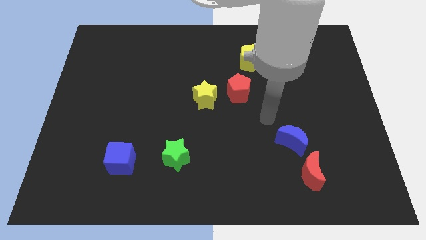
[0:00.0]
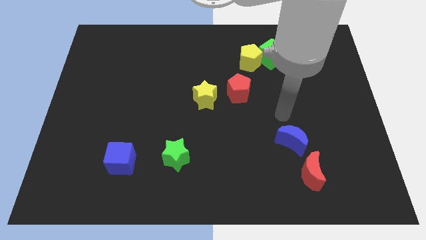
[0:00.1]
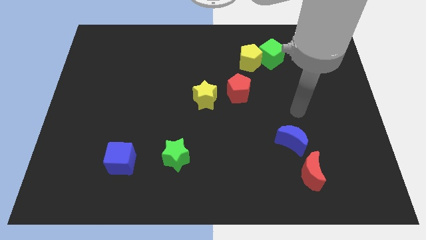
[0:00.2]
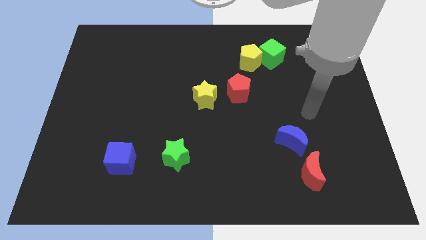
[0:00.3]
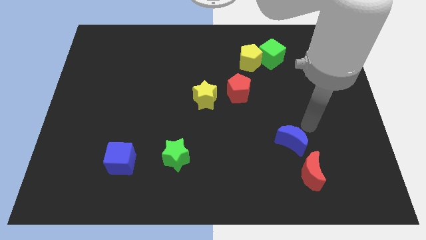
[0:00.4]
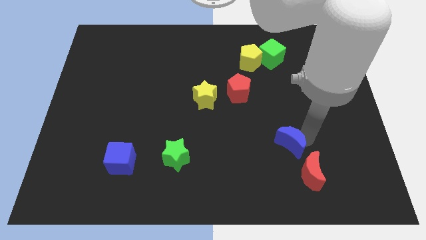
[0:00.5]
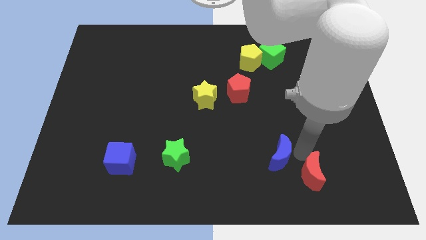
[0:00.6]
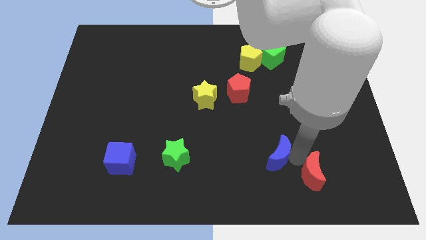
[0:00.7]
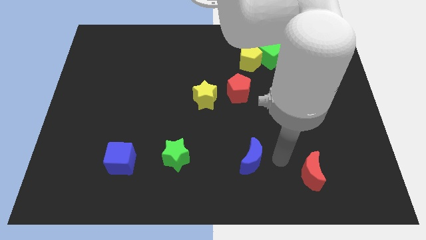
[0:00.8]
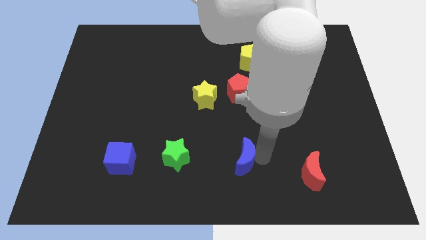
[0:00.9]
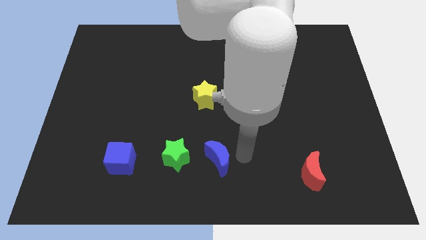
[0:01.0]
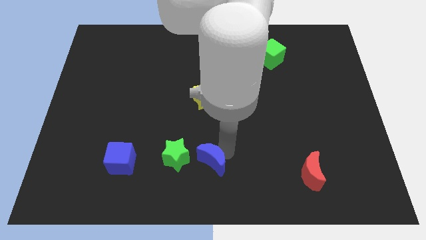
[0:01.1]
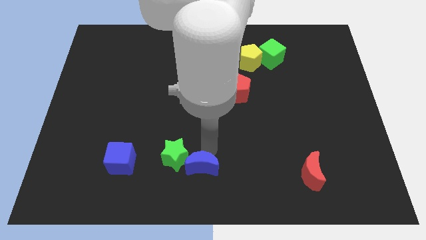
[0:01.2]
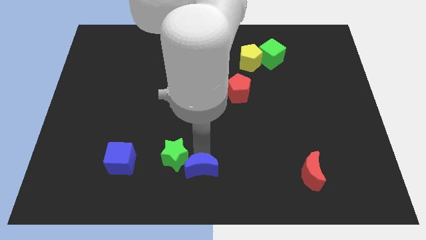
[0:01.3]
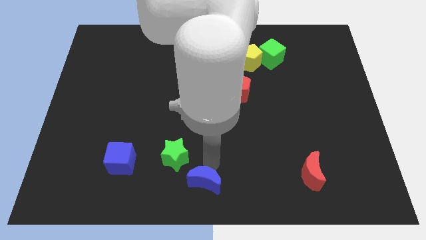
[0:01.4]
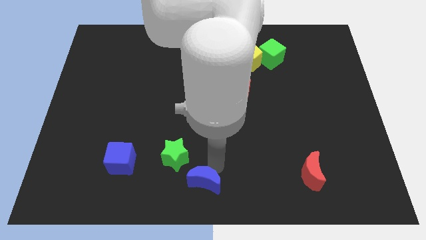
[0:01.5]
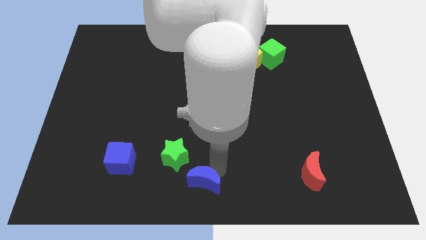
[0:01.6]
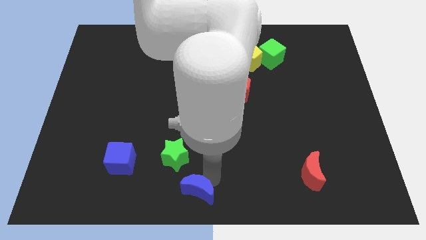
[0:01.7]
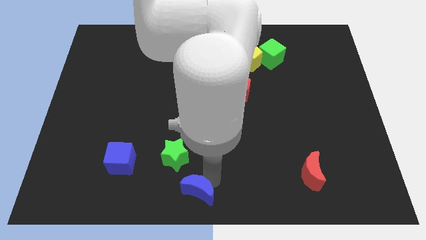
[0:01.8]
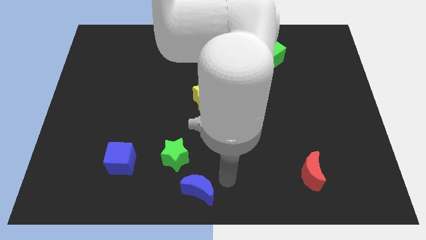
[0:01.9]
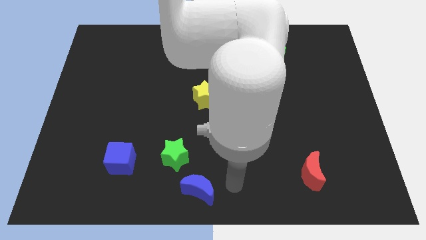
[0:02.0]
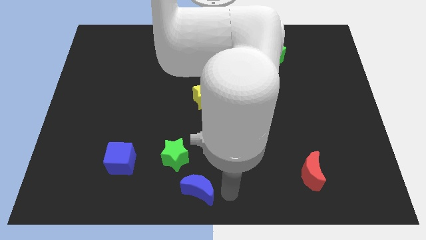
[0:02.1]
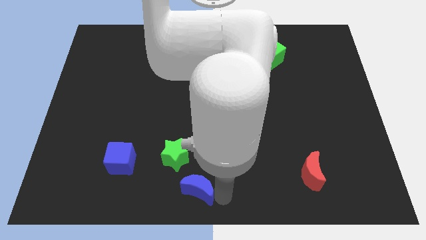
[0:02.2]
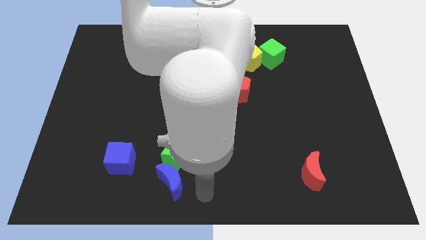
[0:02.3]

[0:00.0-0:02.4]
push blue crescent below green star

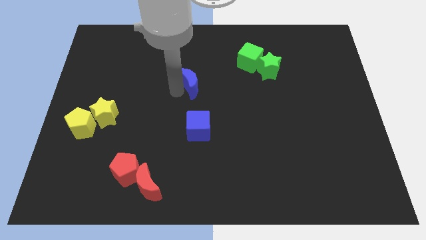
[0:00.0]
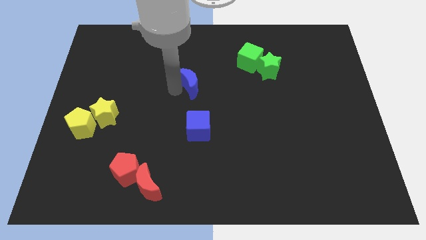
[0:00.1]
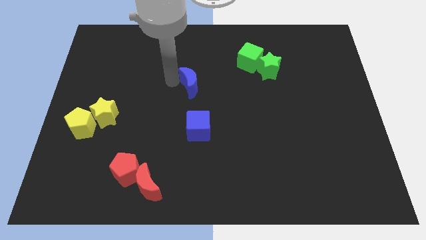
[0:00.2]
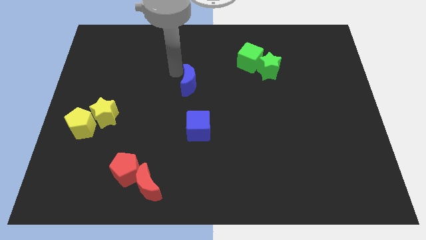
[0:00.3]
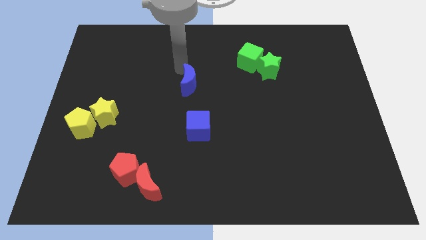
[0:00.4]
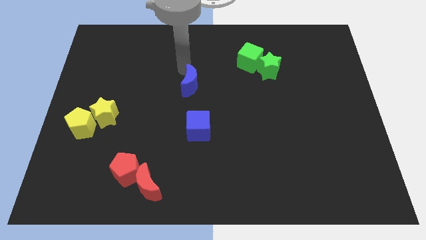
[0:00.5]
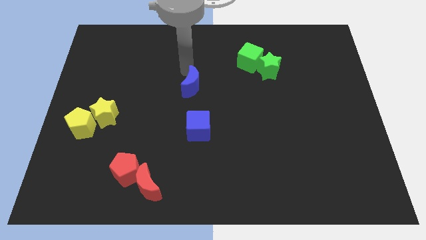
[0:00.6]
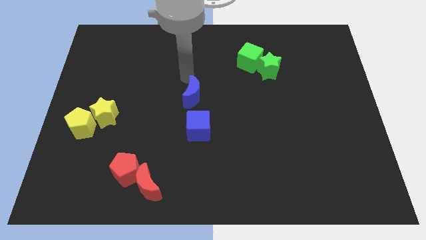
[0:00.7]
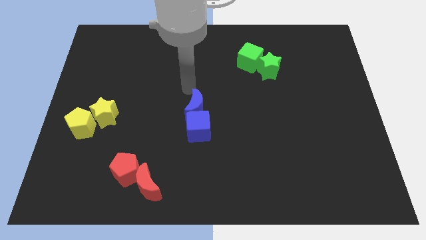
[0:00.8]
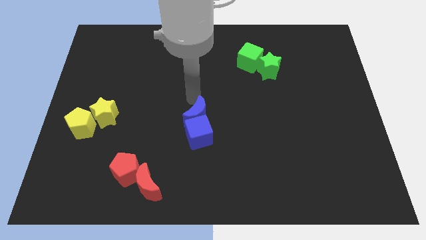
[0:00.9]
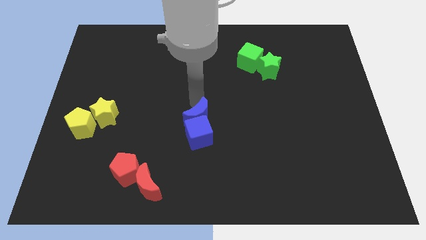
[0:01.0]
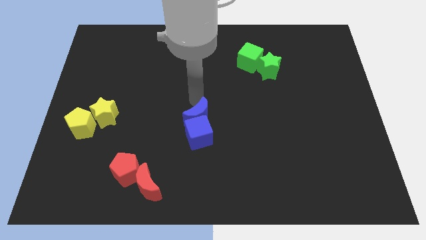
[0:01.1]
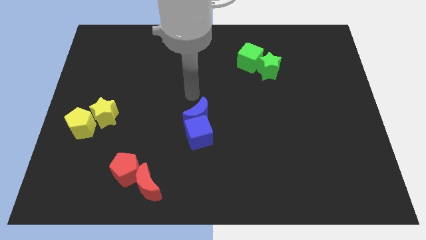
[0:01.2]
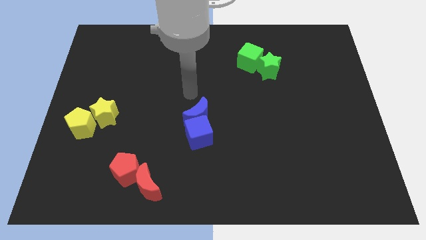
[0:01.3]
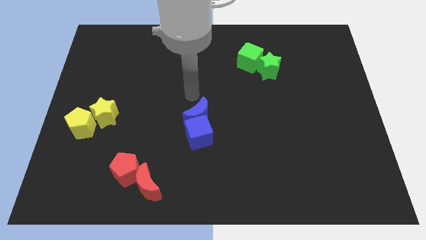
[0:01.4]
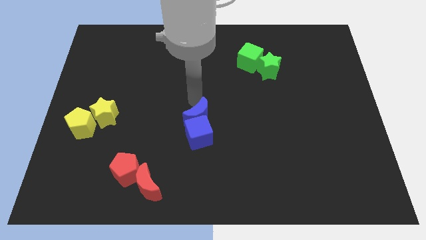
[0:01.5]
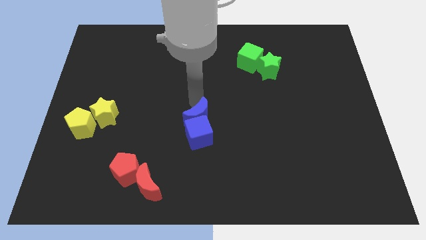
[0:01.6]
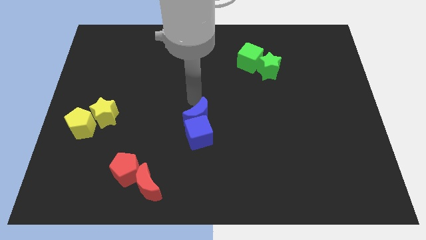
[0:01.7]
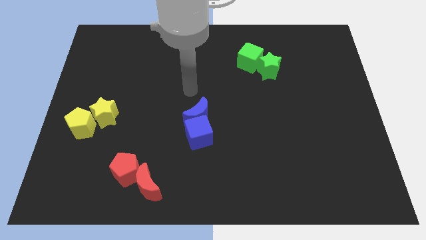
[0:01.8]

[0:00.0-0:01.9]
push the blue crescent into the blue cube from the top

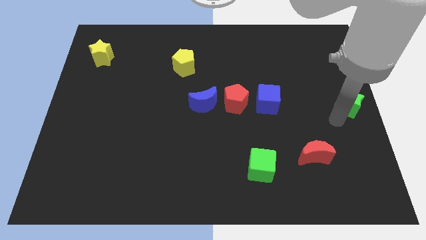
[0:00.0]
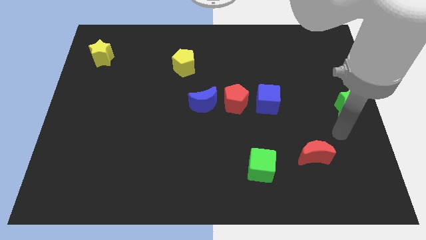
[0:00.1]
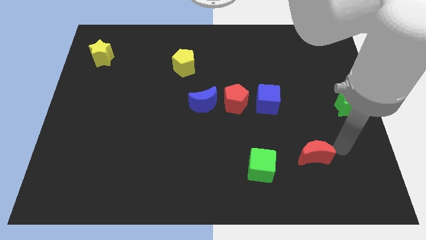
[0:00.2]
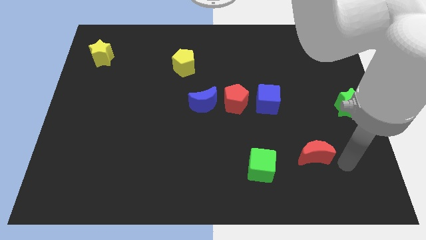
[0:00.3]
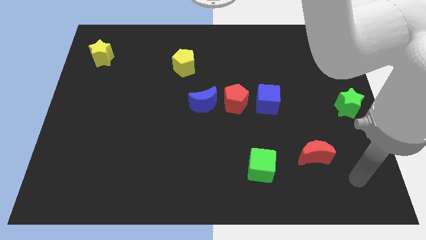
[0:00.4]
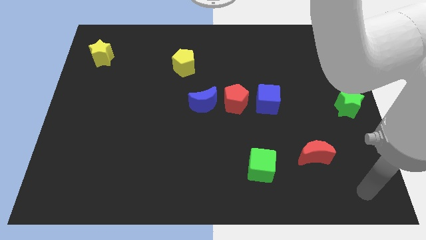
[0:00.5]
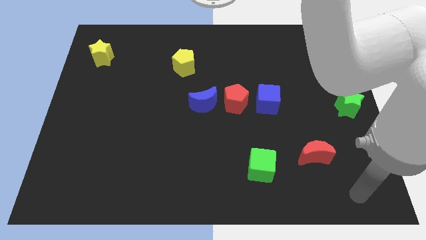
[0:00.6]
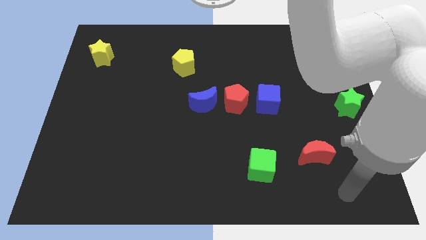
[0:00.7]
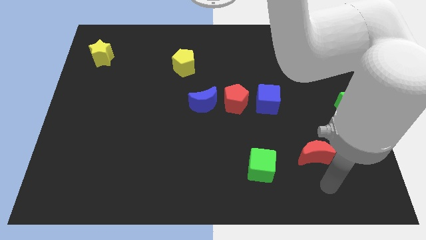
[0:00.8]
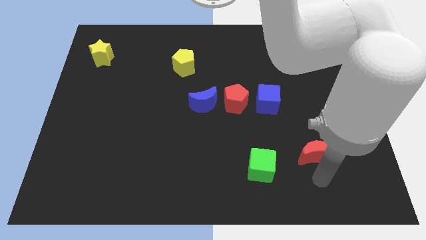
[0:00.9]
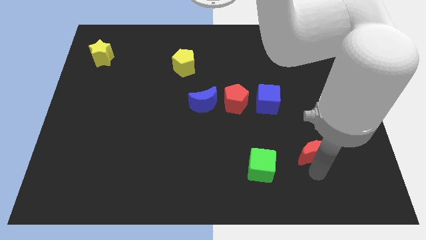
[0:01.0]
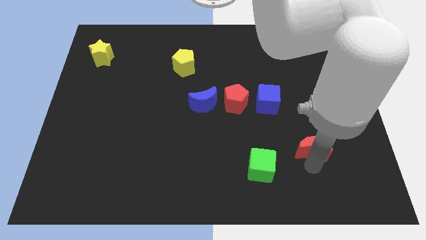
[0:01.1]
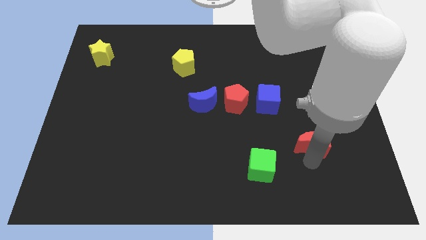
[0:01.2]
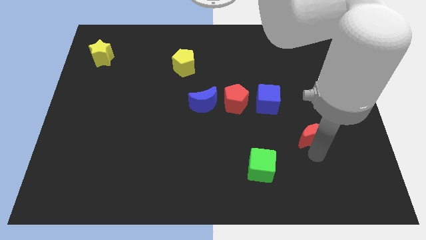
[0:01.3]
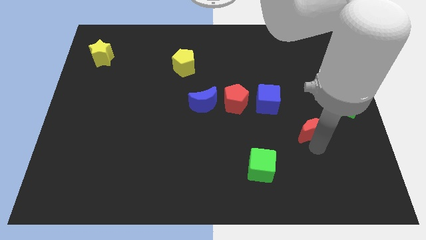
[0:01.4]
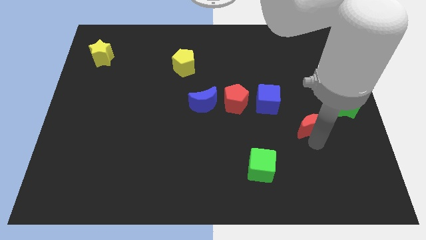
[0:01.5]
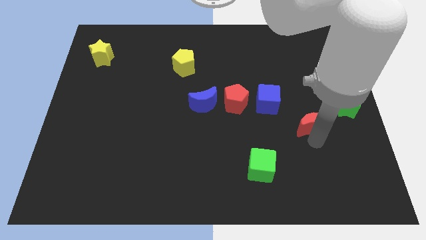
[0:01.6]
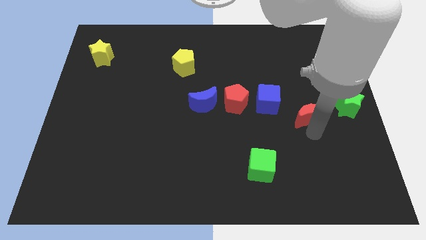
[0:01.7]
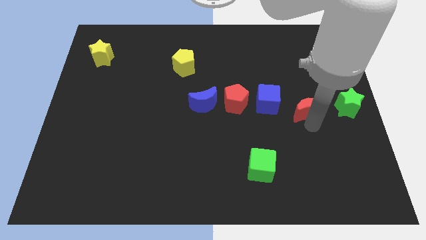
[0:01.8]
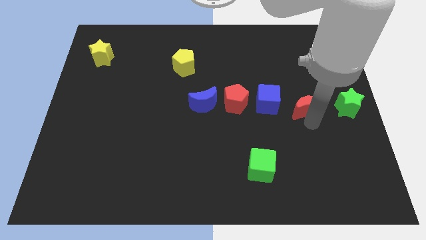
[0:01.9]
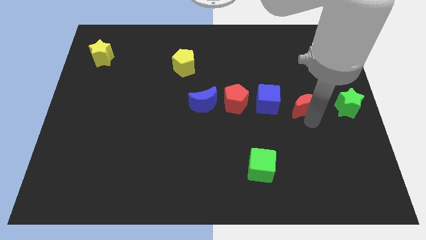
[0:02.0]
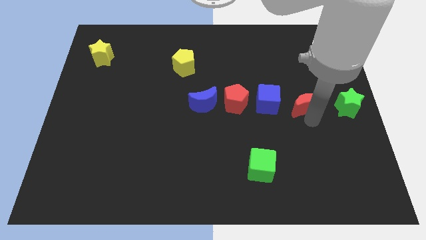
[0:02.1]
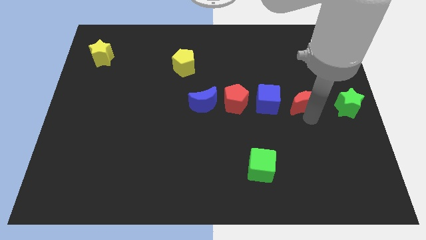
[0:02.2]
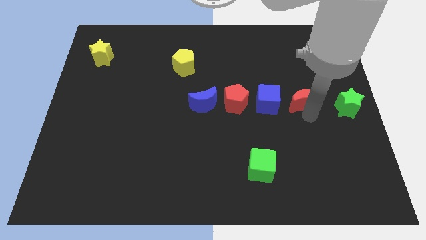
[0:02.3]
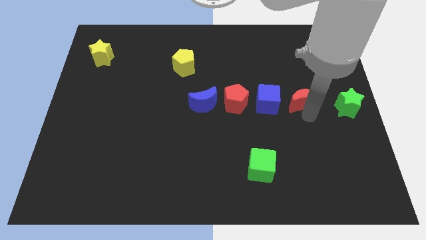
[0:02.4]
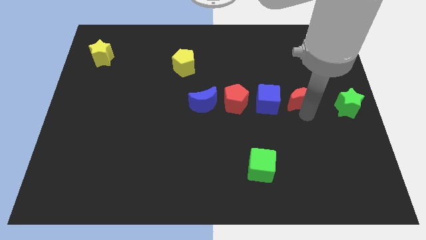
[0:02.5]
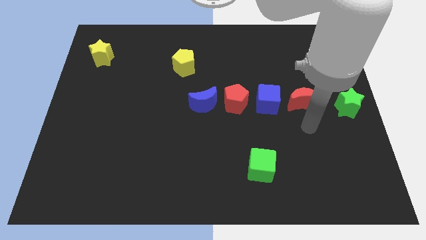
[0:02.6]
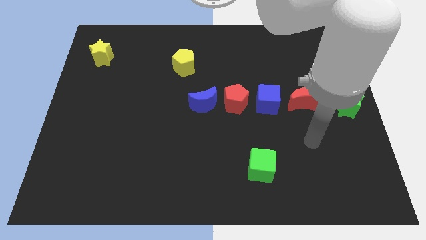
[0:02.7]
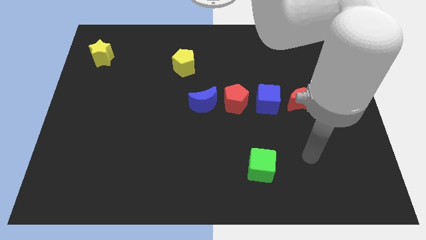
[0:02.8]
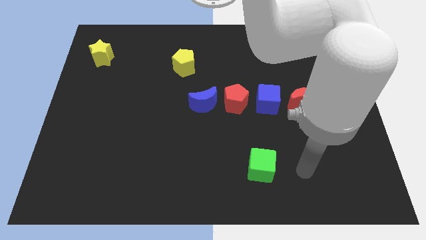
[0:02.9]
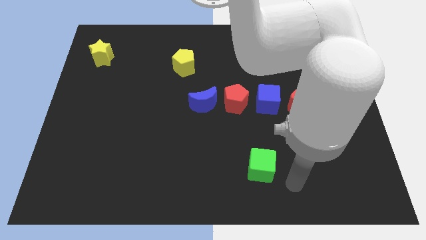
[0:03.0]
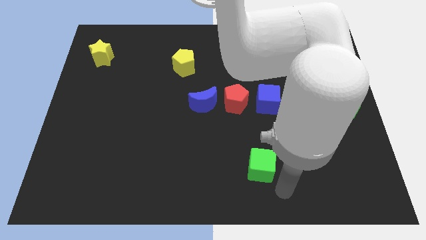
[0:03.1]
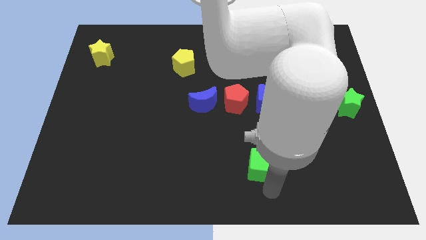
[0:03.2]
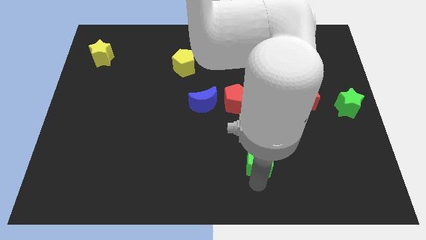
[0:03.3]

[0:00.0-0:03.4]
drag the red crescent to the left of green star

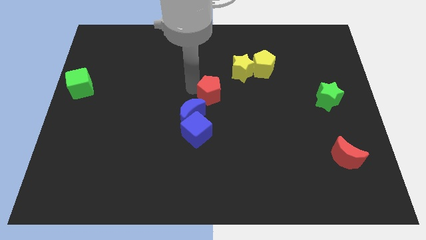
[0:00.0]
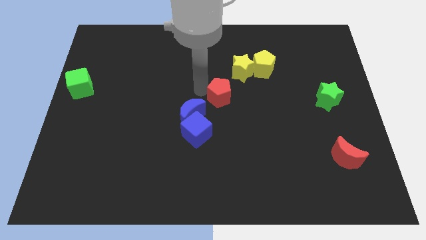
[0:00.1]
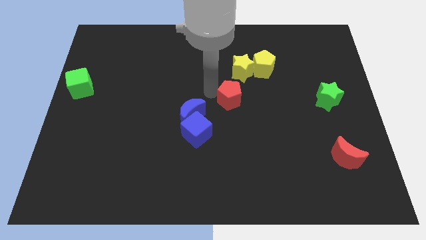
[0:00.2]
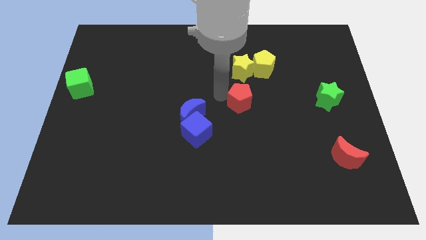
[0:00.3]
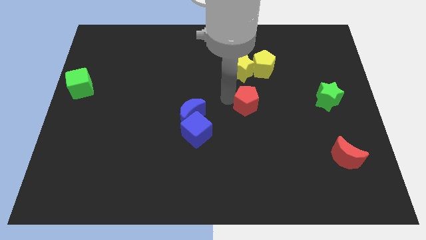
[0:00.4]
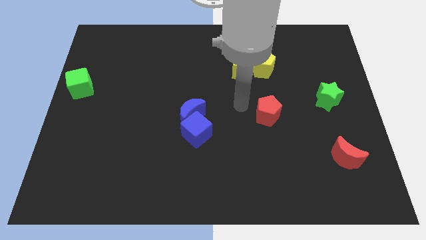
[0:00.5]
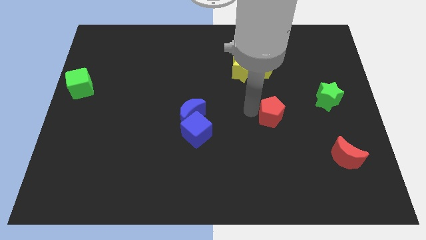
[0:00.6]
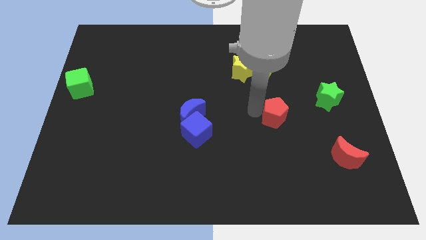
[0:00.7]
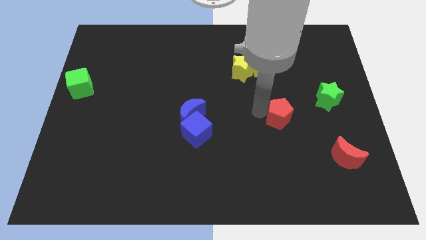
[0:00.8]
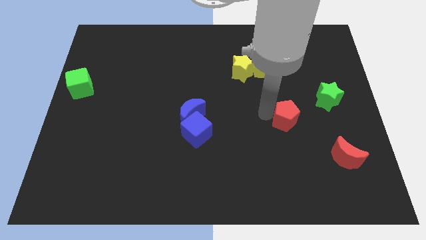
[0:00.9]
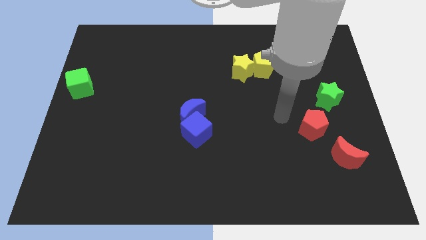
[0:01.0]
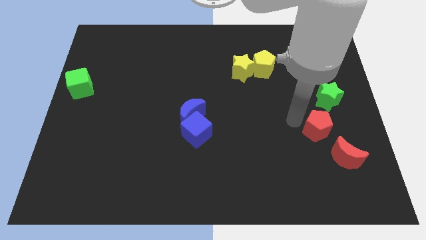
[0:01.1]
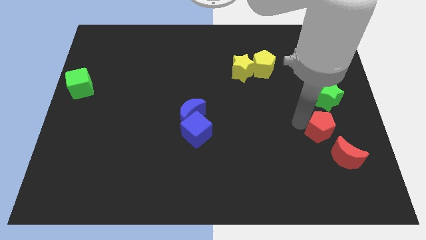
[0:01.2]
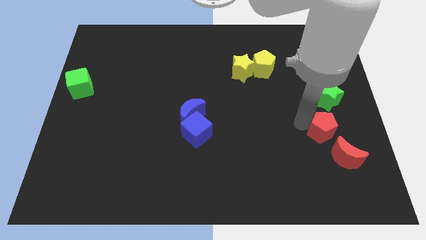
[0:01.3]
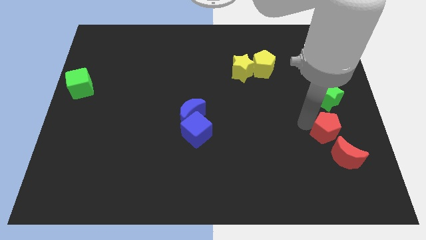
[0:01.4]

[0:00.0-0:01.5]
place the red pentagon in between green star and red crescent
